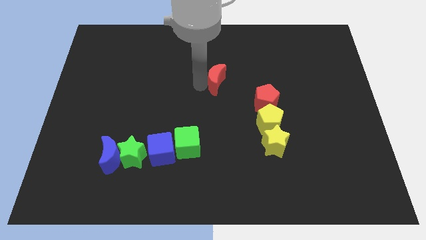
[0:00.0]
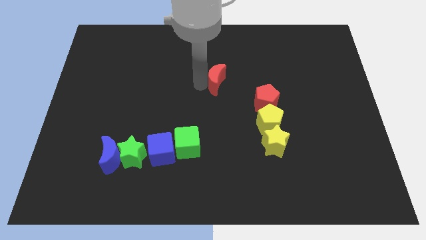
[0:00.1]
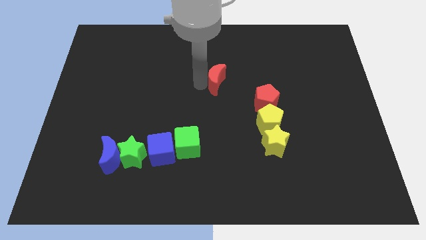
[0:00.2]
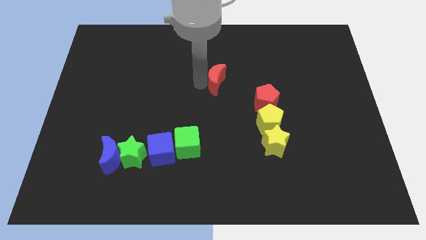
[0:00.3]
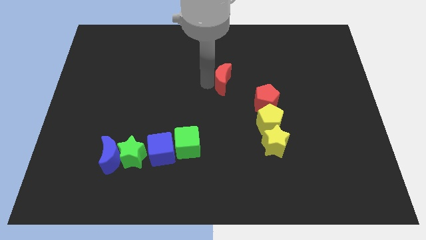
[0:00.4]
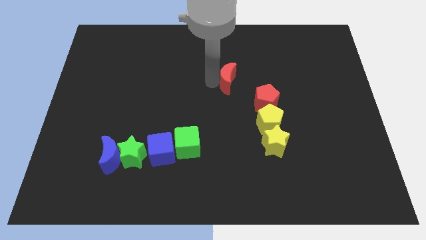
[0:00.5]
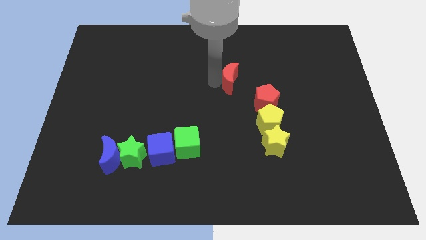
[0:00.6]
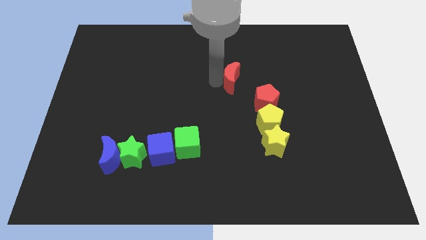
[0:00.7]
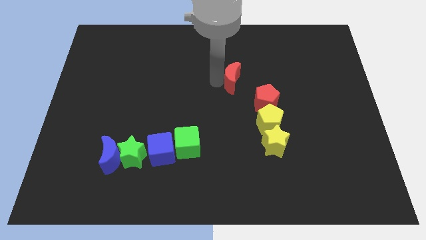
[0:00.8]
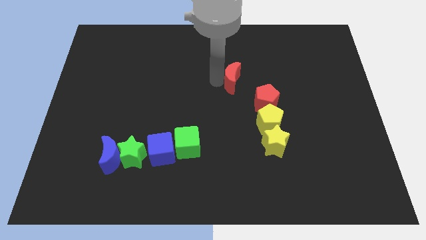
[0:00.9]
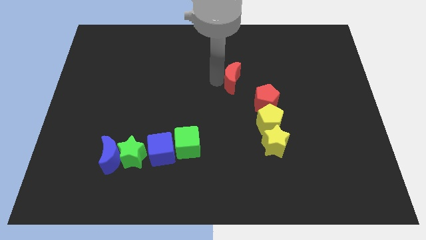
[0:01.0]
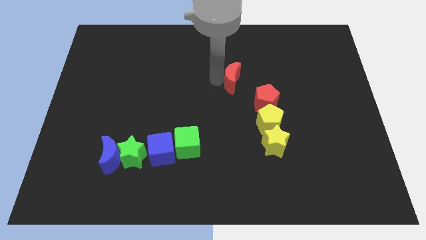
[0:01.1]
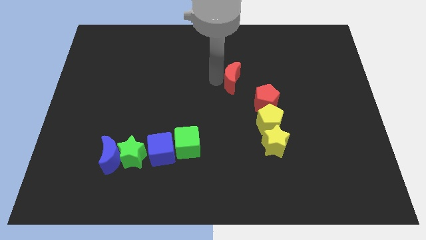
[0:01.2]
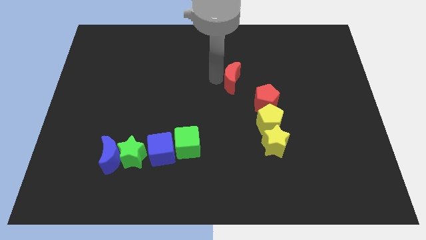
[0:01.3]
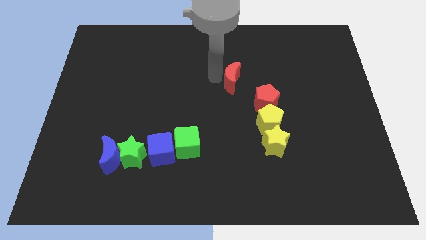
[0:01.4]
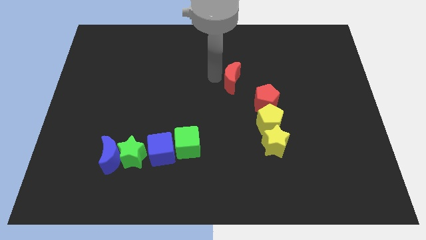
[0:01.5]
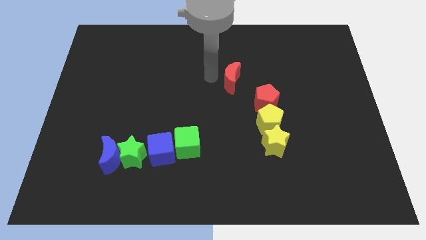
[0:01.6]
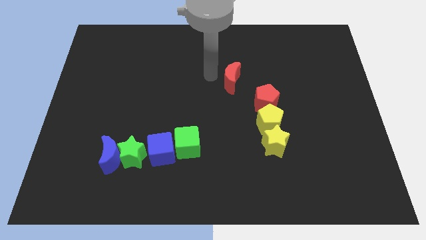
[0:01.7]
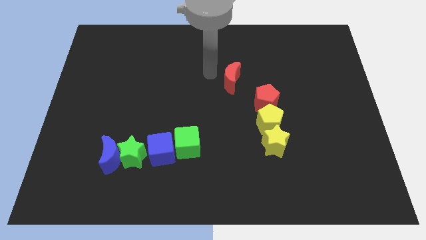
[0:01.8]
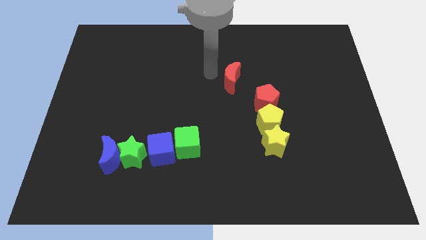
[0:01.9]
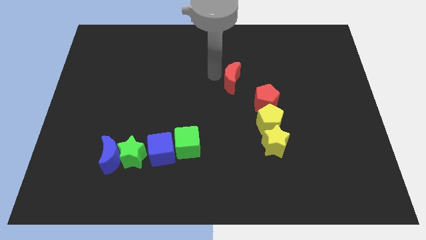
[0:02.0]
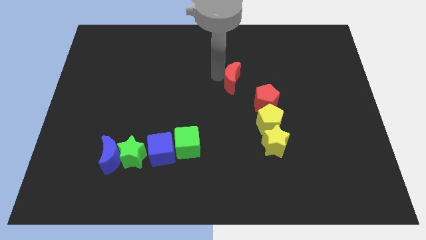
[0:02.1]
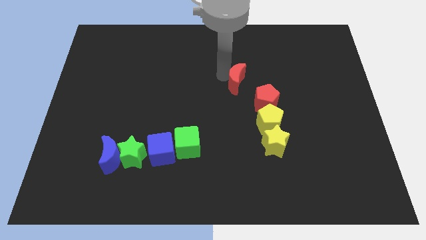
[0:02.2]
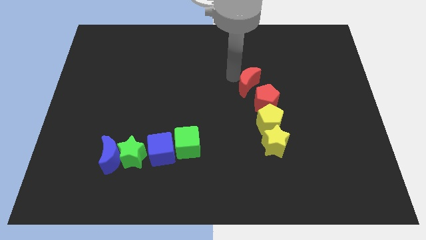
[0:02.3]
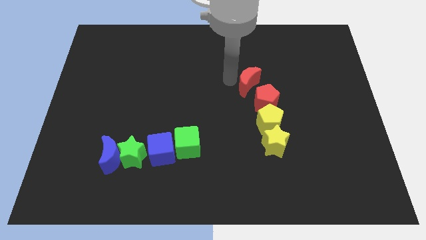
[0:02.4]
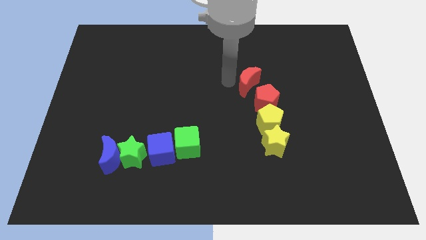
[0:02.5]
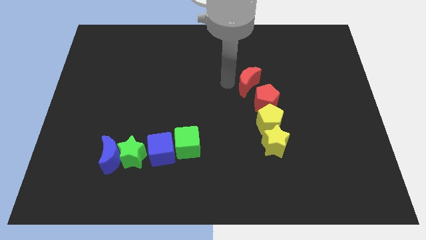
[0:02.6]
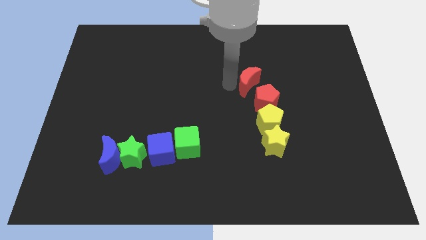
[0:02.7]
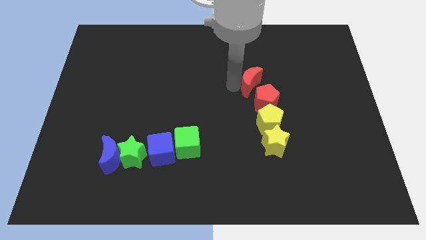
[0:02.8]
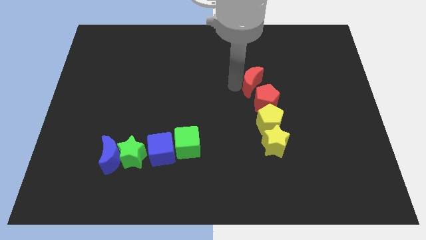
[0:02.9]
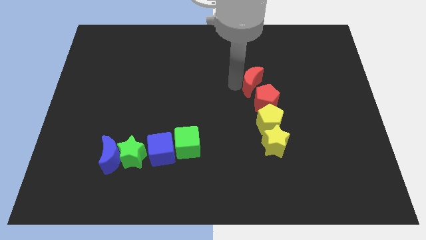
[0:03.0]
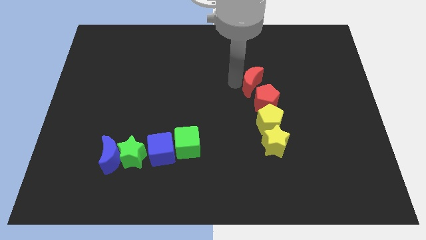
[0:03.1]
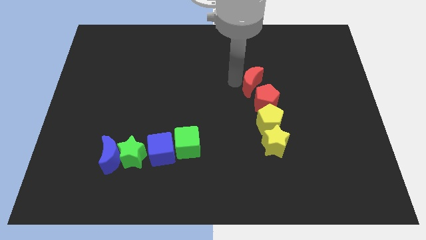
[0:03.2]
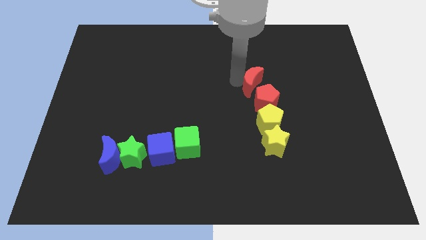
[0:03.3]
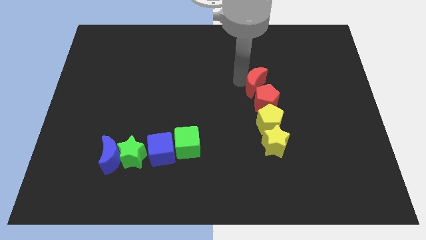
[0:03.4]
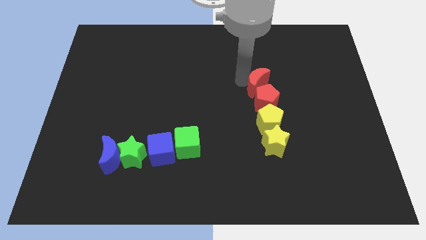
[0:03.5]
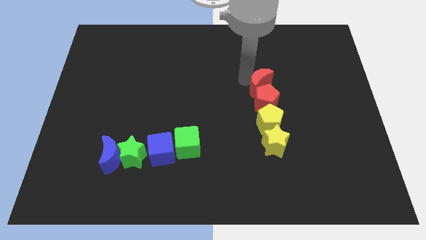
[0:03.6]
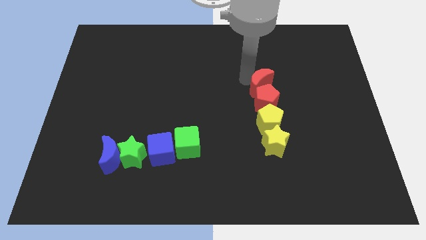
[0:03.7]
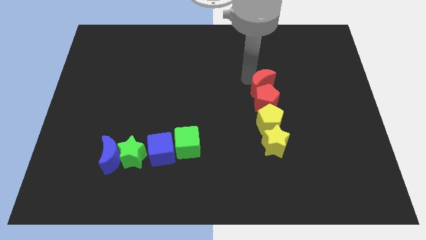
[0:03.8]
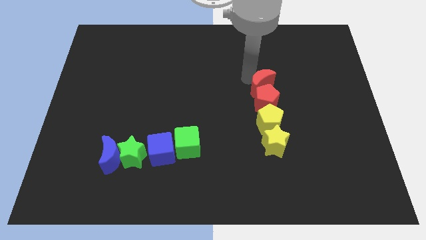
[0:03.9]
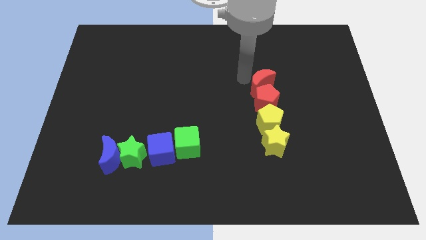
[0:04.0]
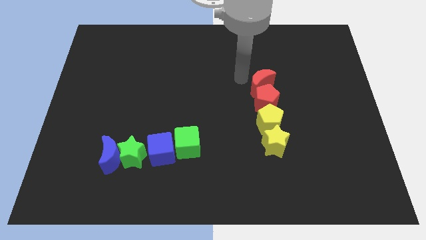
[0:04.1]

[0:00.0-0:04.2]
push the red moon to the top left side of the red pentagon

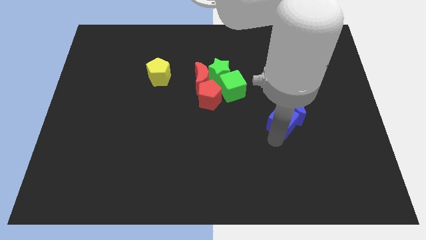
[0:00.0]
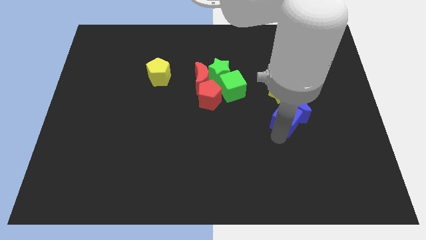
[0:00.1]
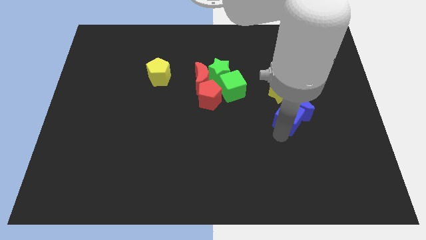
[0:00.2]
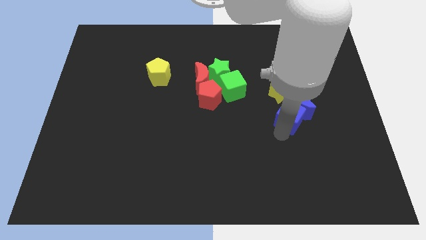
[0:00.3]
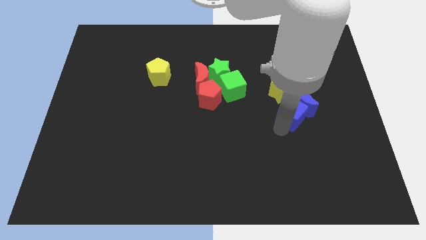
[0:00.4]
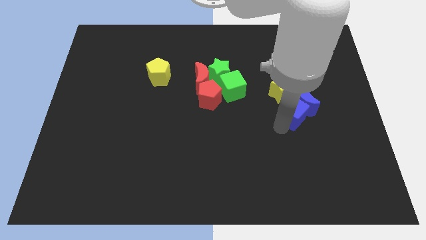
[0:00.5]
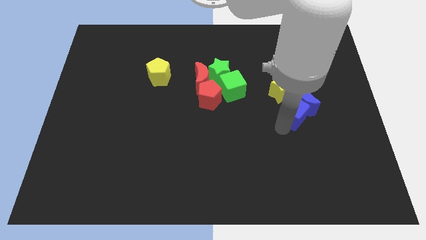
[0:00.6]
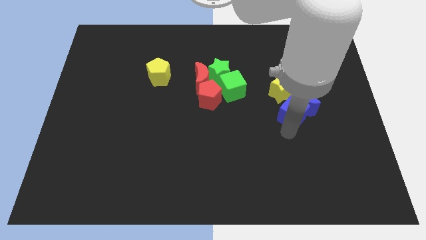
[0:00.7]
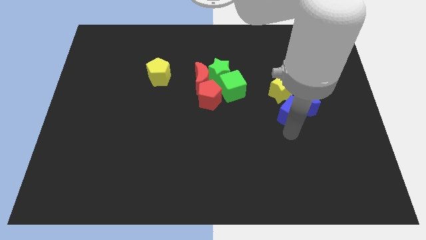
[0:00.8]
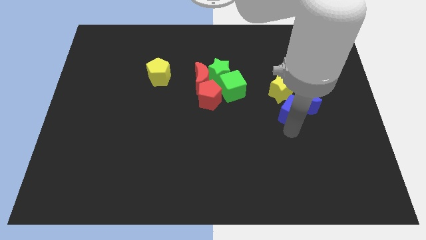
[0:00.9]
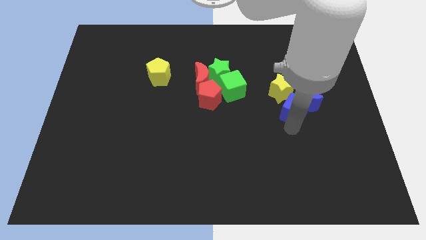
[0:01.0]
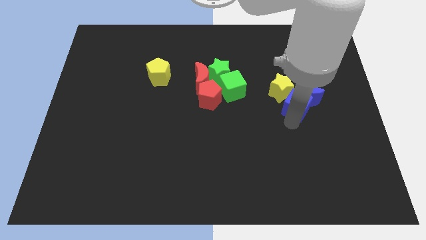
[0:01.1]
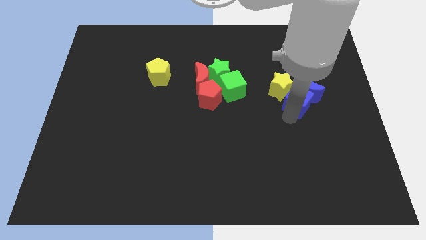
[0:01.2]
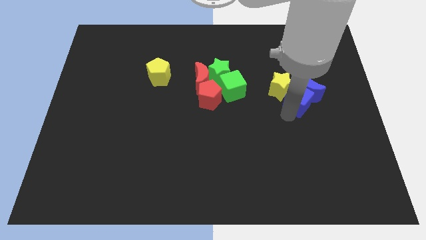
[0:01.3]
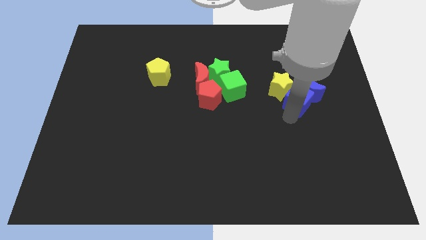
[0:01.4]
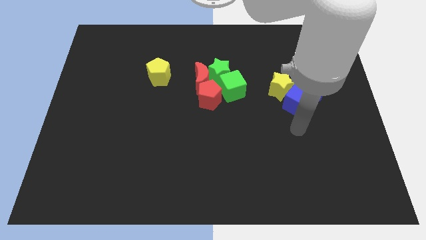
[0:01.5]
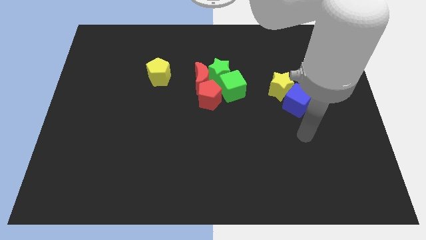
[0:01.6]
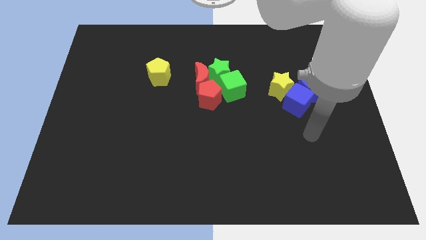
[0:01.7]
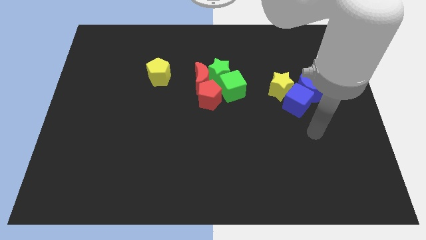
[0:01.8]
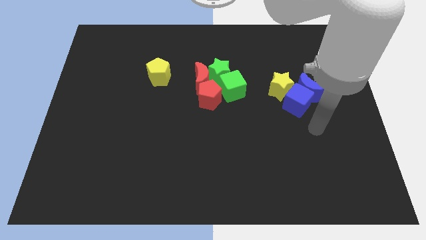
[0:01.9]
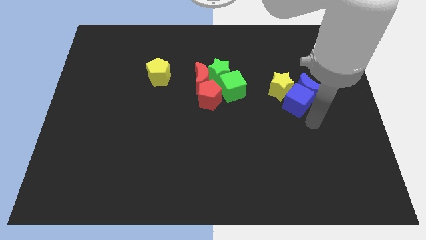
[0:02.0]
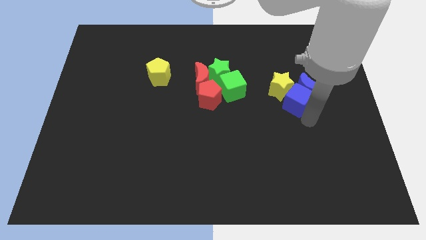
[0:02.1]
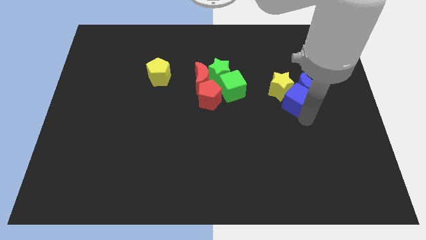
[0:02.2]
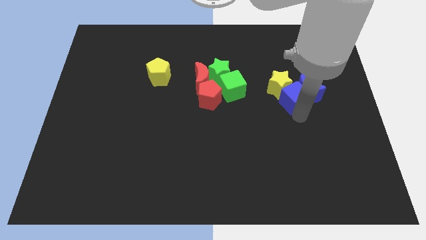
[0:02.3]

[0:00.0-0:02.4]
push the blue cube into the blue crescent from the bottom

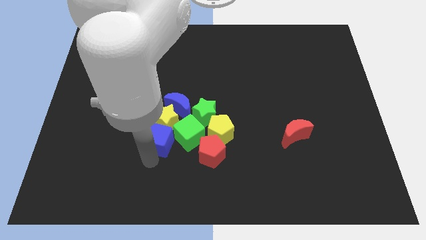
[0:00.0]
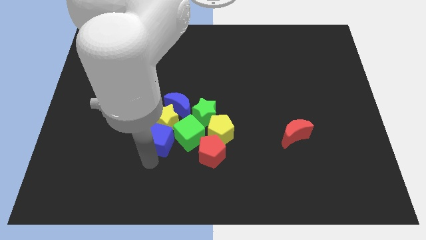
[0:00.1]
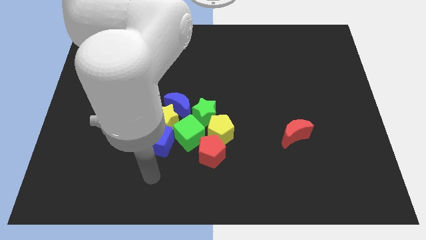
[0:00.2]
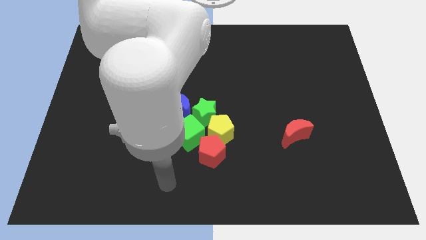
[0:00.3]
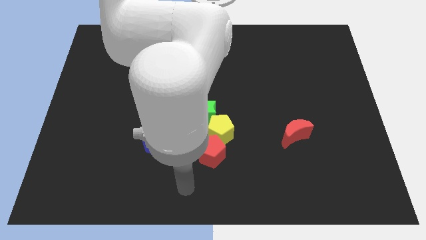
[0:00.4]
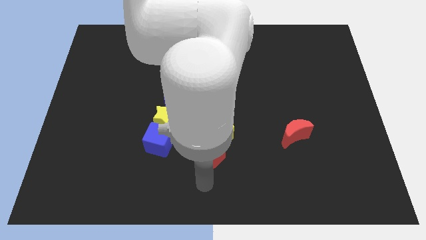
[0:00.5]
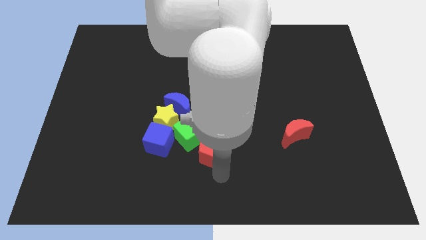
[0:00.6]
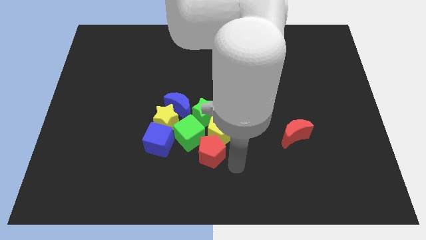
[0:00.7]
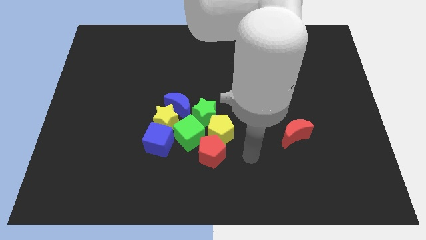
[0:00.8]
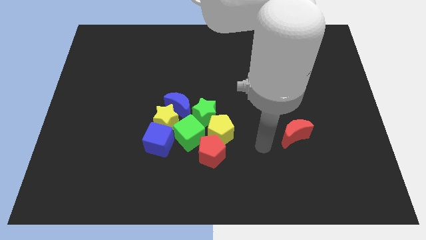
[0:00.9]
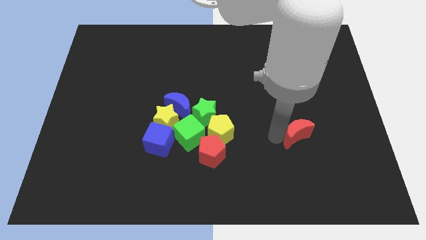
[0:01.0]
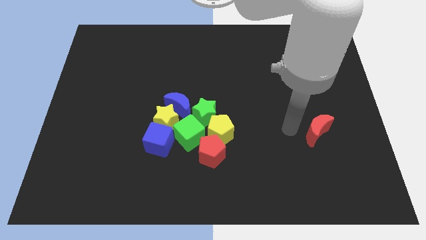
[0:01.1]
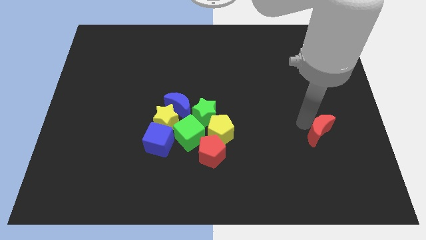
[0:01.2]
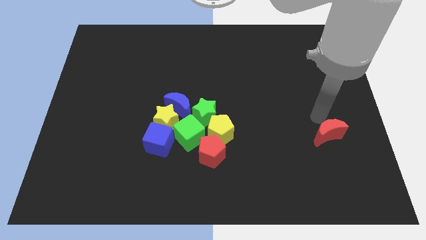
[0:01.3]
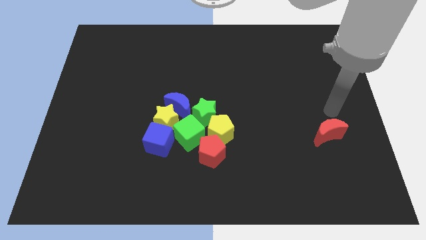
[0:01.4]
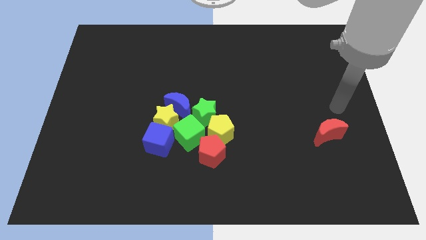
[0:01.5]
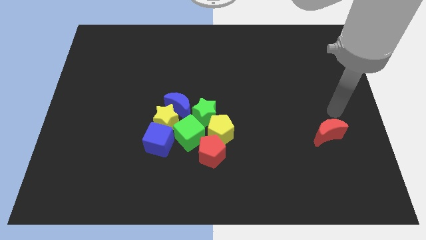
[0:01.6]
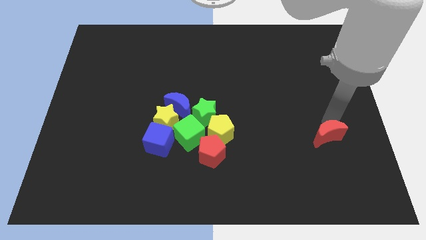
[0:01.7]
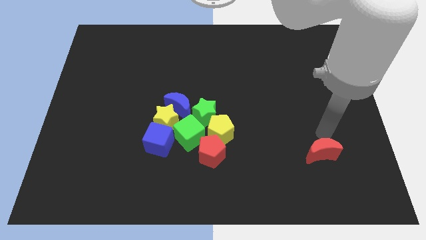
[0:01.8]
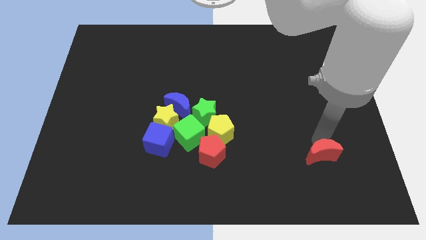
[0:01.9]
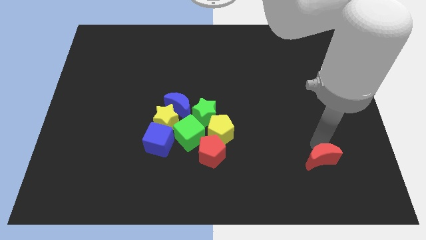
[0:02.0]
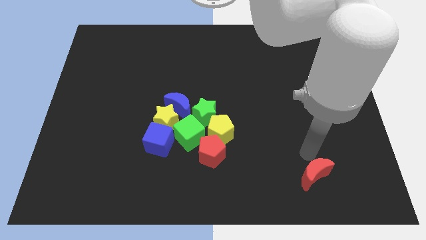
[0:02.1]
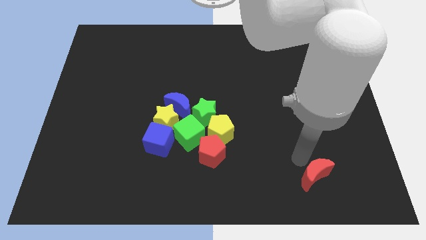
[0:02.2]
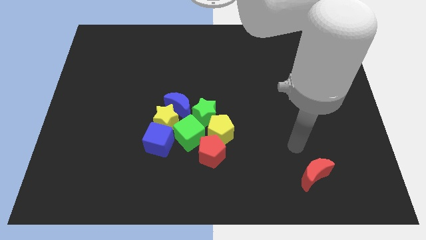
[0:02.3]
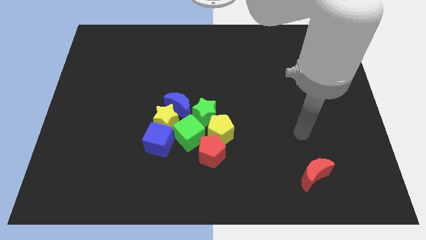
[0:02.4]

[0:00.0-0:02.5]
push the red crescent towards the bottom of the board
